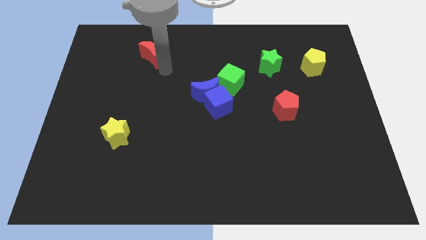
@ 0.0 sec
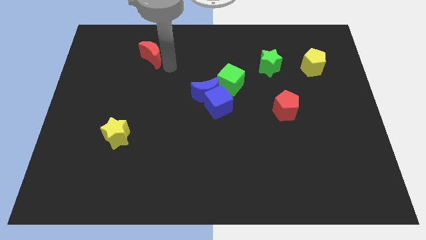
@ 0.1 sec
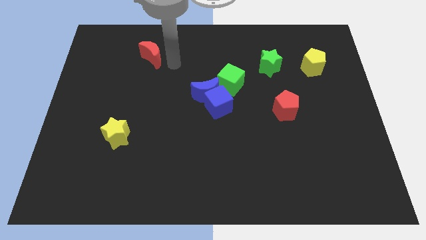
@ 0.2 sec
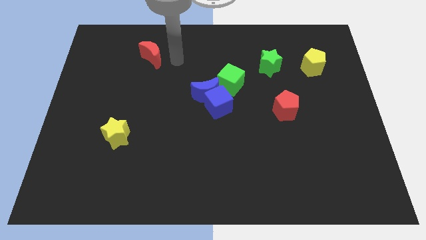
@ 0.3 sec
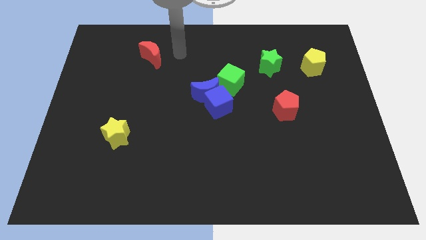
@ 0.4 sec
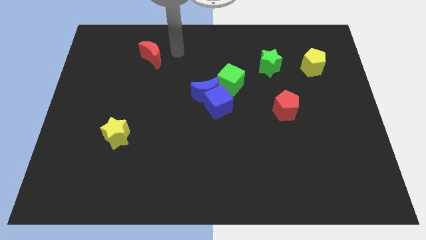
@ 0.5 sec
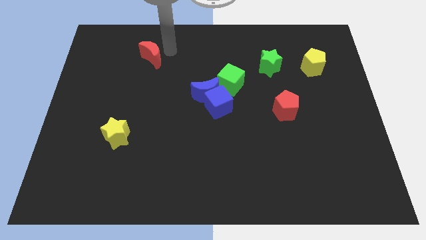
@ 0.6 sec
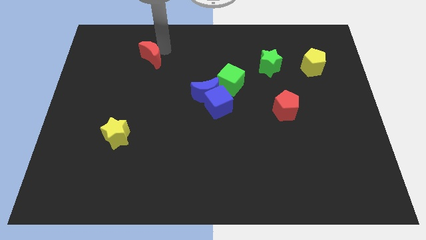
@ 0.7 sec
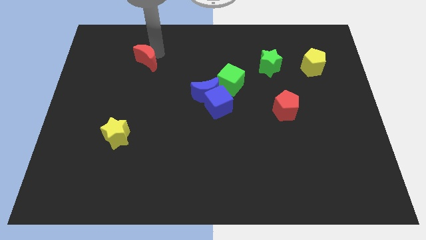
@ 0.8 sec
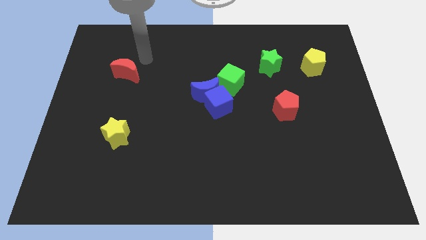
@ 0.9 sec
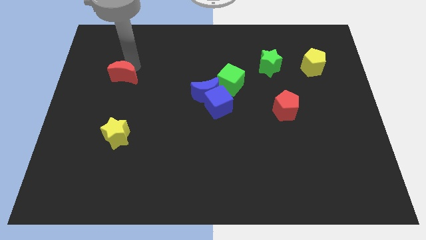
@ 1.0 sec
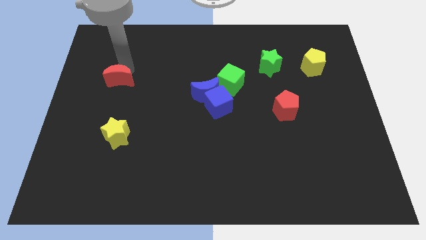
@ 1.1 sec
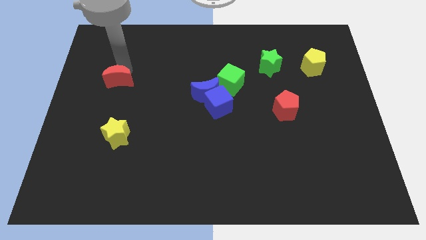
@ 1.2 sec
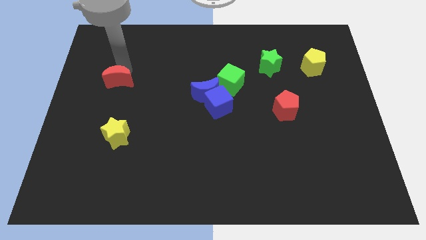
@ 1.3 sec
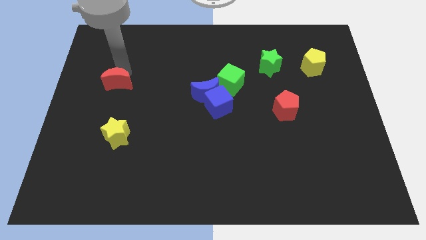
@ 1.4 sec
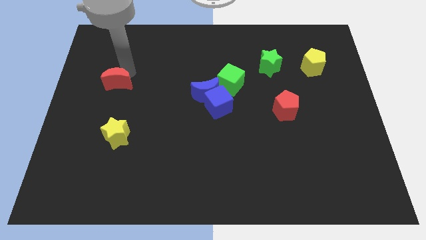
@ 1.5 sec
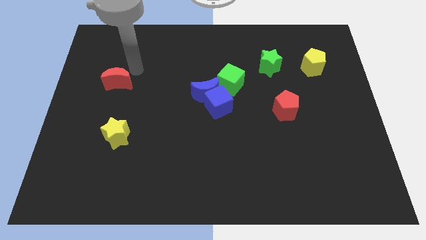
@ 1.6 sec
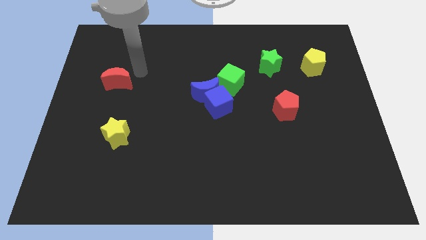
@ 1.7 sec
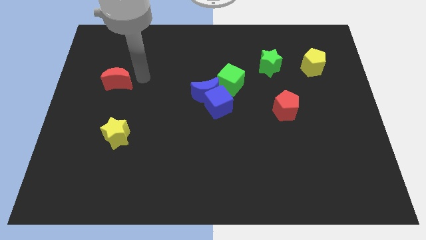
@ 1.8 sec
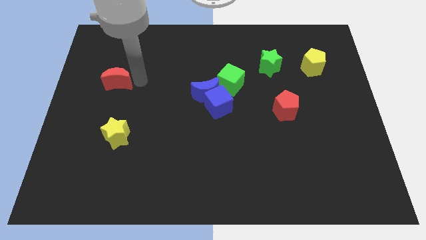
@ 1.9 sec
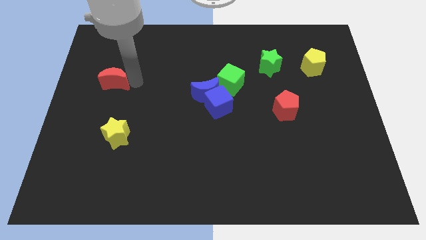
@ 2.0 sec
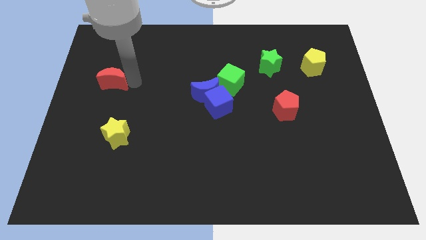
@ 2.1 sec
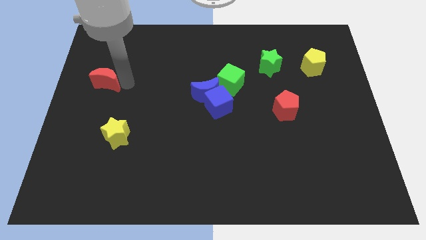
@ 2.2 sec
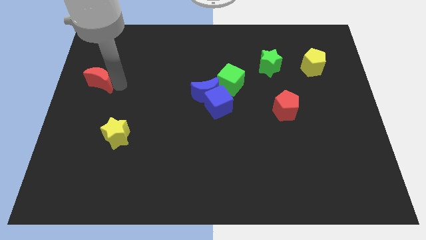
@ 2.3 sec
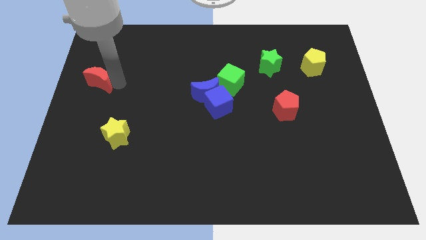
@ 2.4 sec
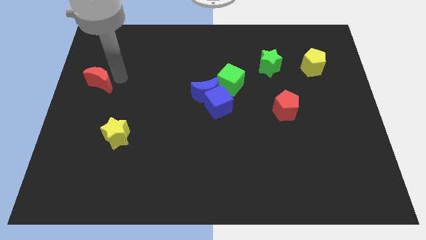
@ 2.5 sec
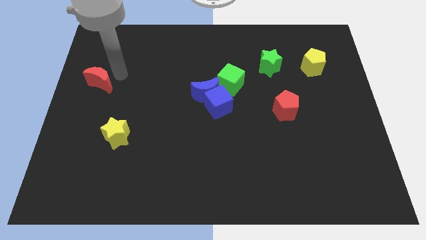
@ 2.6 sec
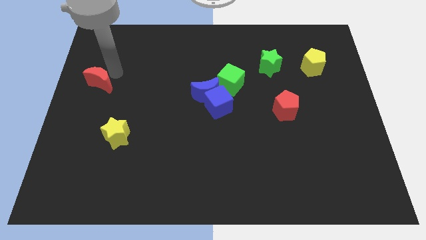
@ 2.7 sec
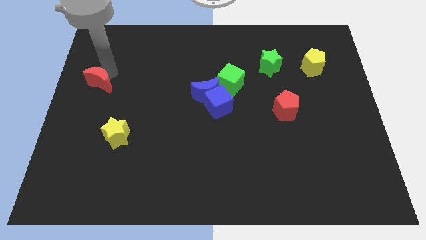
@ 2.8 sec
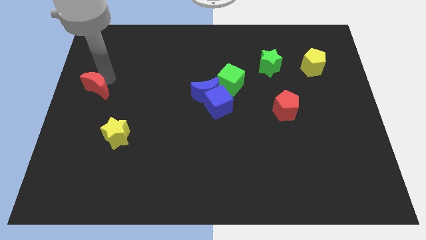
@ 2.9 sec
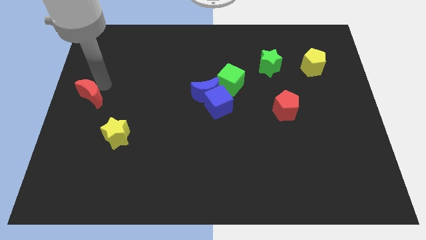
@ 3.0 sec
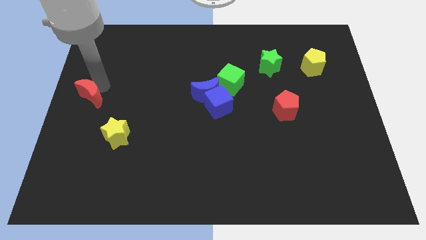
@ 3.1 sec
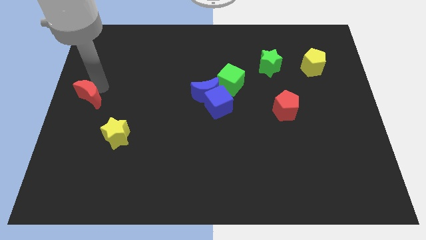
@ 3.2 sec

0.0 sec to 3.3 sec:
push the red moon towards the center left of the board

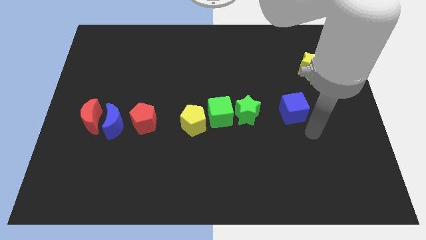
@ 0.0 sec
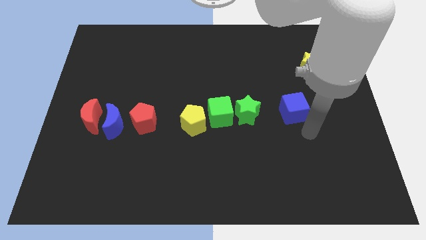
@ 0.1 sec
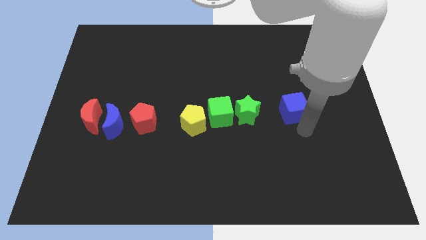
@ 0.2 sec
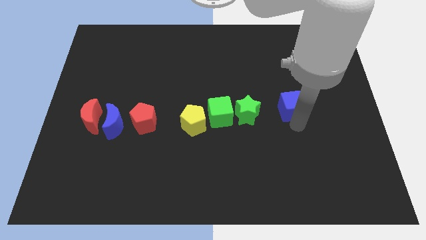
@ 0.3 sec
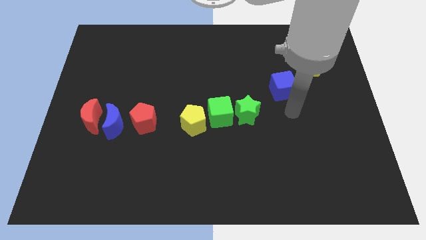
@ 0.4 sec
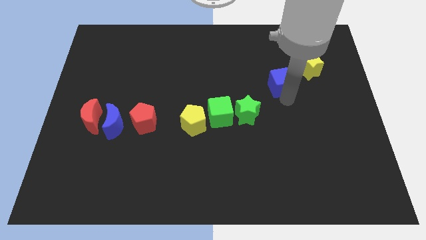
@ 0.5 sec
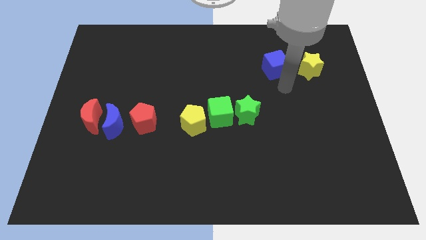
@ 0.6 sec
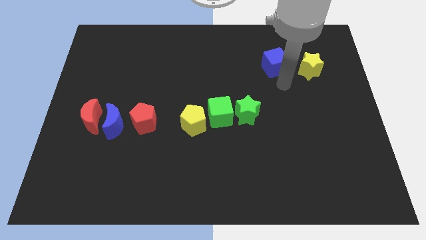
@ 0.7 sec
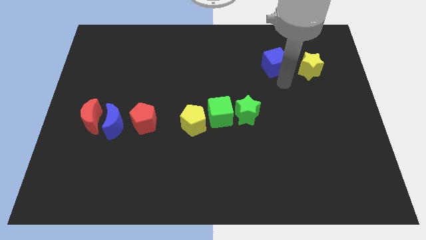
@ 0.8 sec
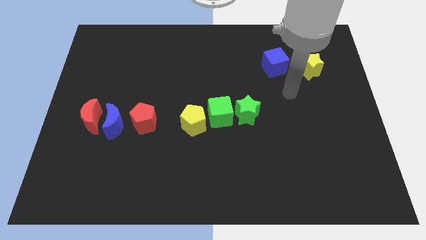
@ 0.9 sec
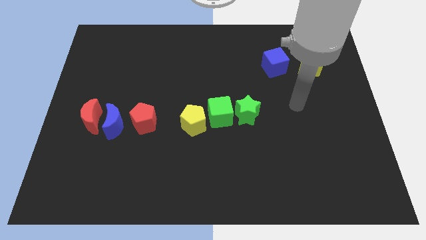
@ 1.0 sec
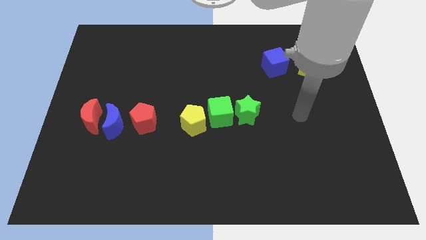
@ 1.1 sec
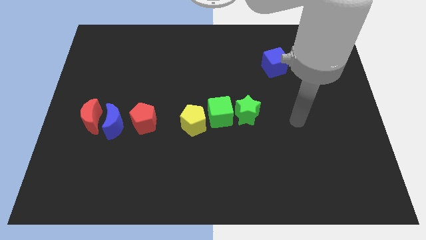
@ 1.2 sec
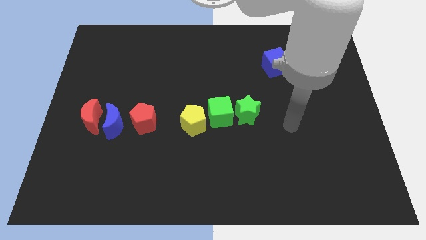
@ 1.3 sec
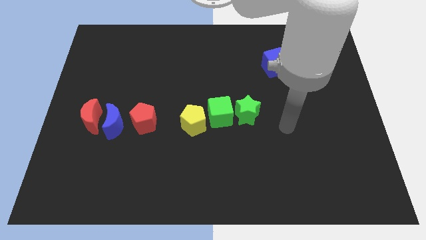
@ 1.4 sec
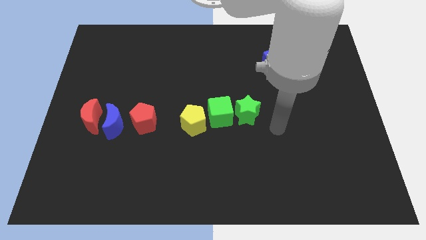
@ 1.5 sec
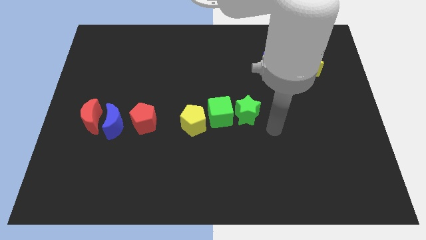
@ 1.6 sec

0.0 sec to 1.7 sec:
place the blue cube to the left of the yellow star

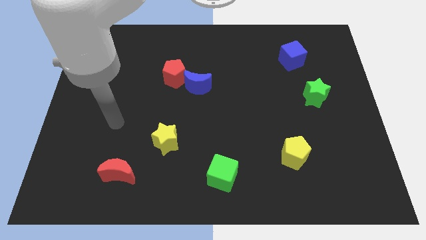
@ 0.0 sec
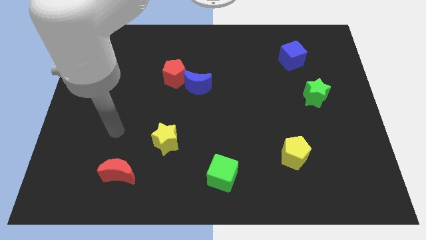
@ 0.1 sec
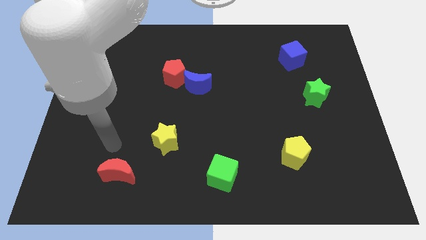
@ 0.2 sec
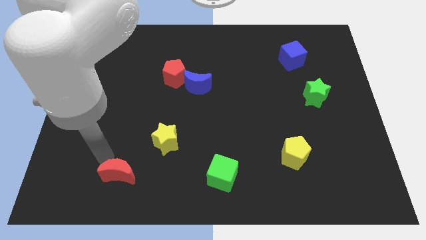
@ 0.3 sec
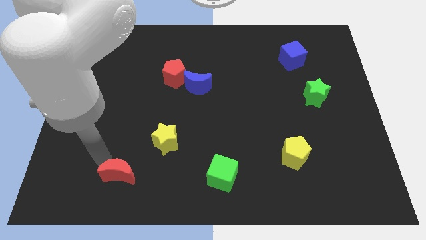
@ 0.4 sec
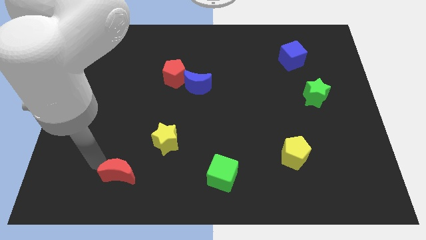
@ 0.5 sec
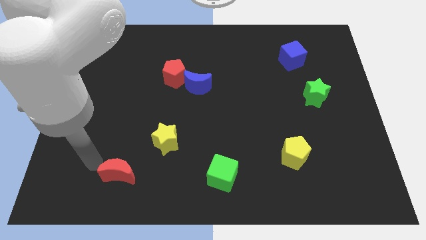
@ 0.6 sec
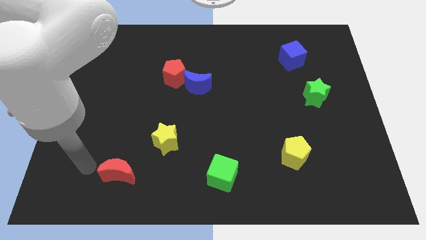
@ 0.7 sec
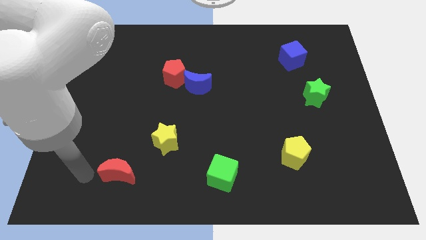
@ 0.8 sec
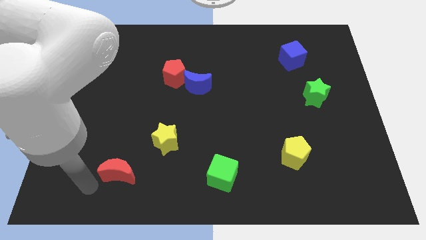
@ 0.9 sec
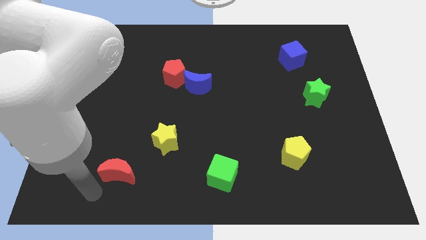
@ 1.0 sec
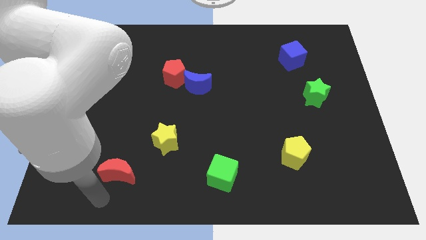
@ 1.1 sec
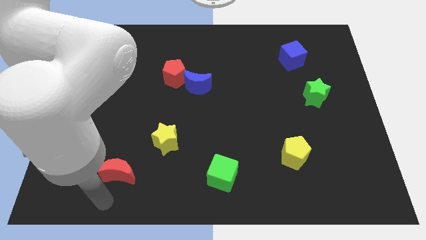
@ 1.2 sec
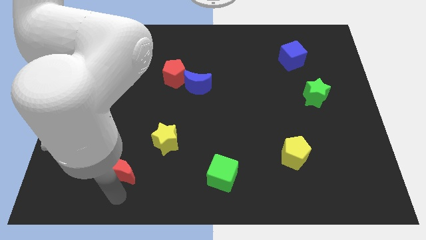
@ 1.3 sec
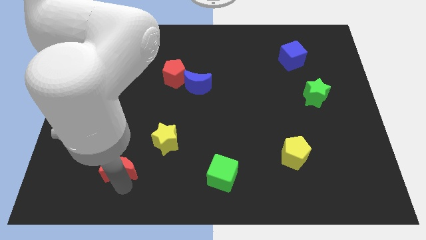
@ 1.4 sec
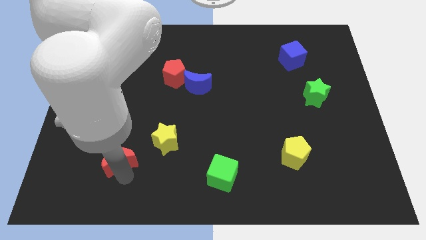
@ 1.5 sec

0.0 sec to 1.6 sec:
move your arm close to the red moon

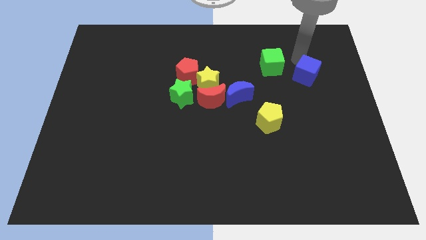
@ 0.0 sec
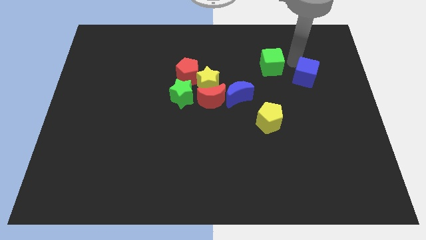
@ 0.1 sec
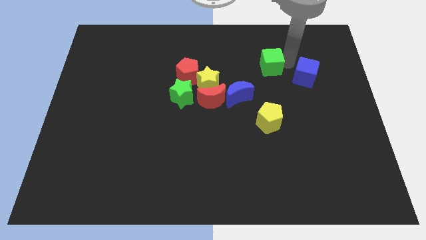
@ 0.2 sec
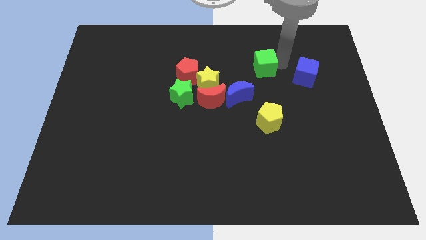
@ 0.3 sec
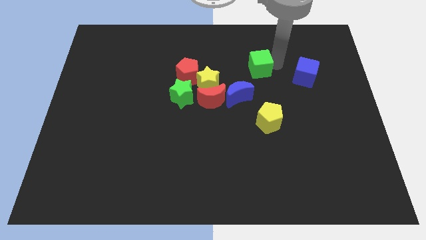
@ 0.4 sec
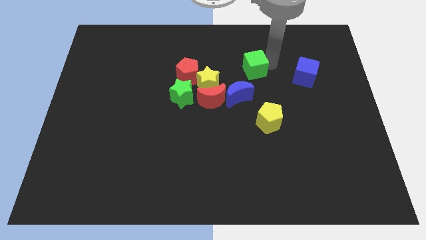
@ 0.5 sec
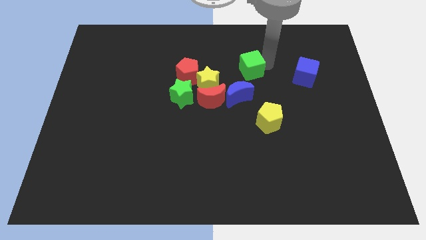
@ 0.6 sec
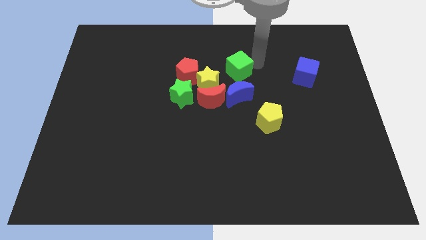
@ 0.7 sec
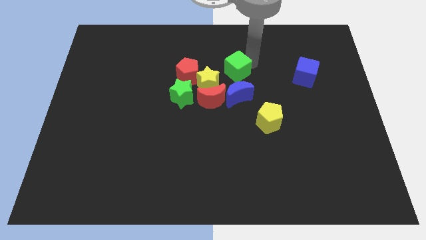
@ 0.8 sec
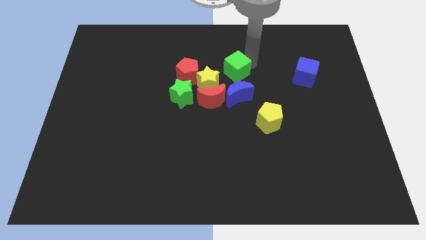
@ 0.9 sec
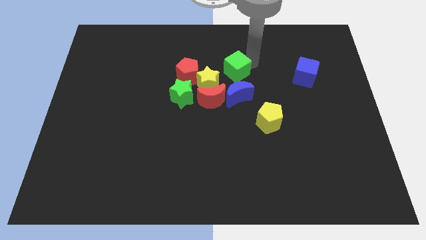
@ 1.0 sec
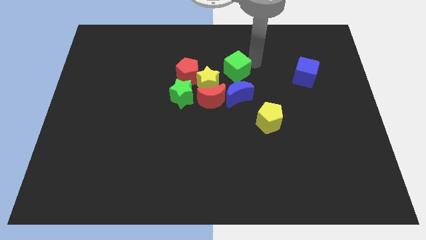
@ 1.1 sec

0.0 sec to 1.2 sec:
place the green cube above the blue crescent

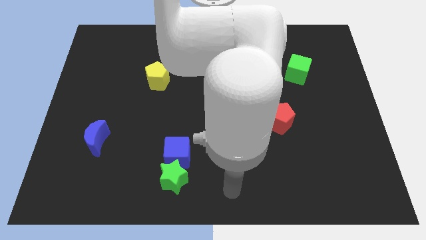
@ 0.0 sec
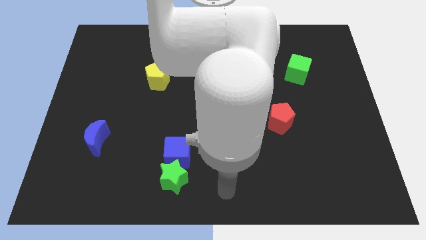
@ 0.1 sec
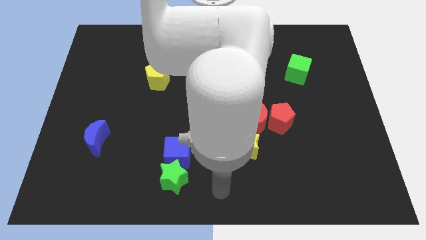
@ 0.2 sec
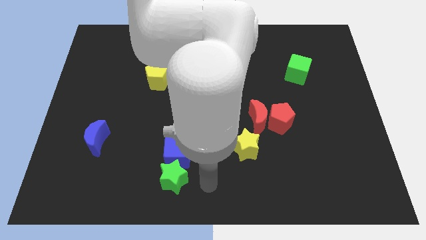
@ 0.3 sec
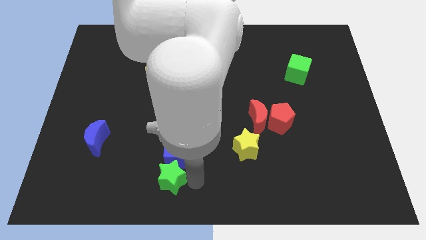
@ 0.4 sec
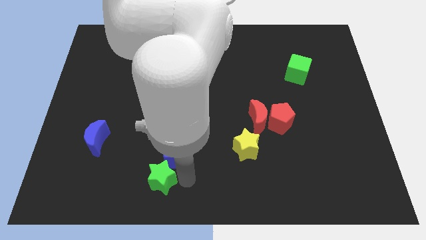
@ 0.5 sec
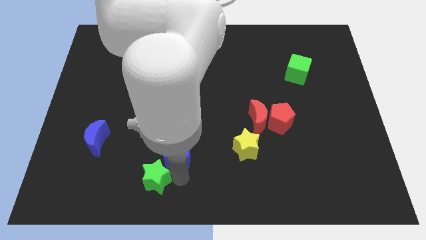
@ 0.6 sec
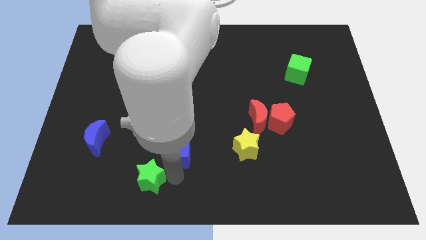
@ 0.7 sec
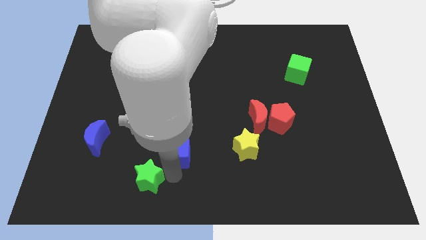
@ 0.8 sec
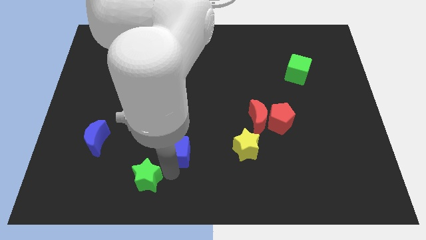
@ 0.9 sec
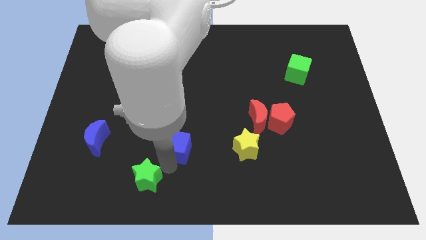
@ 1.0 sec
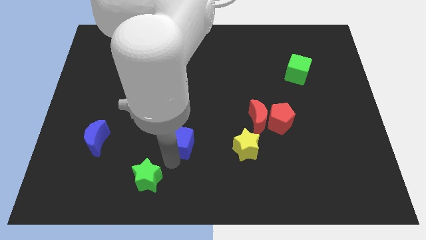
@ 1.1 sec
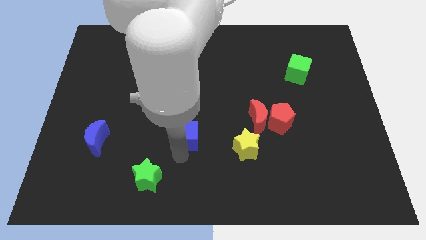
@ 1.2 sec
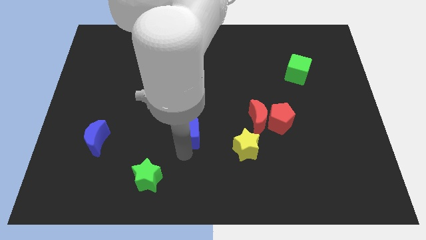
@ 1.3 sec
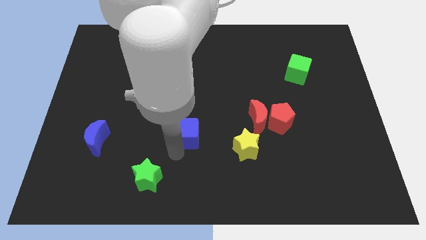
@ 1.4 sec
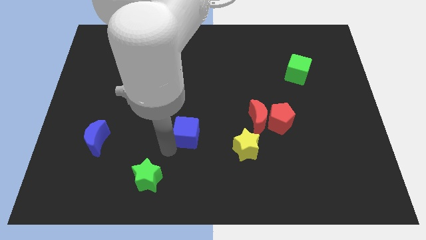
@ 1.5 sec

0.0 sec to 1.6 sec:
separate the green star and blue cube
